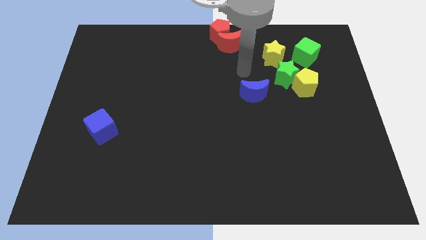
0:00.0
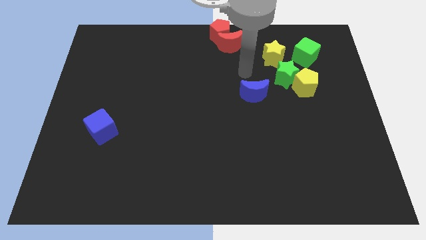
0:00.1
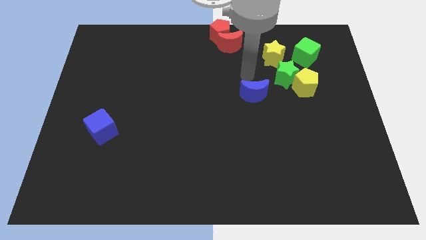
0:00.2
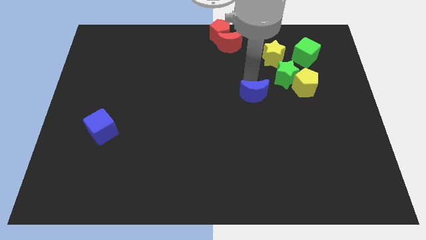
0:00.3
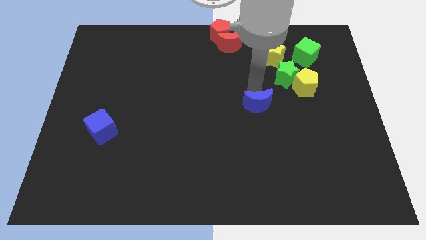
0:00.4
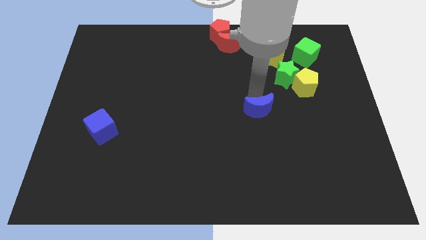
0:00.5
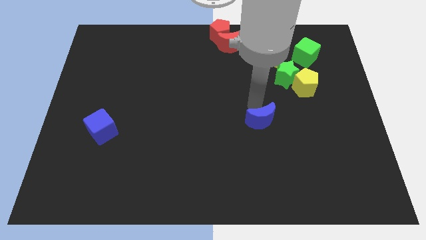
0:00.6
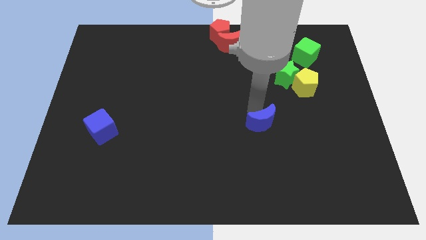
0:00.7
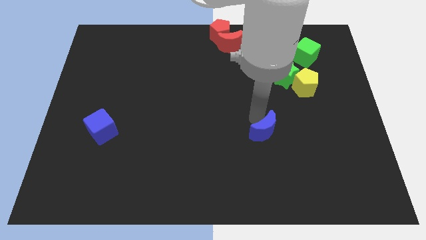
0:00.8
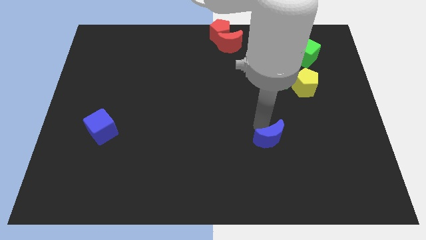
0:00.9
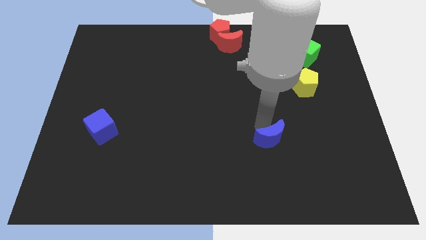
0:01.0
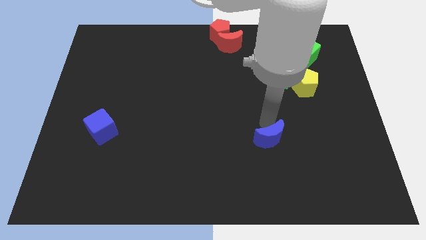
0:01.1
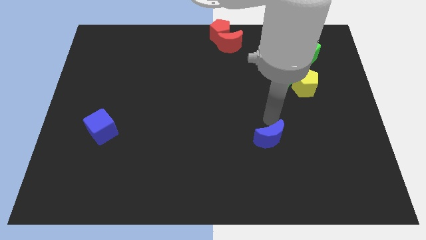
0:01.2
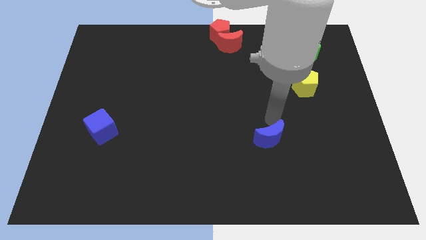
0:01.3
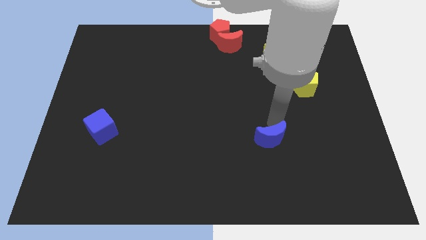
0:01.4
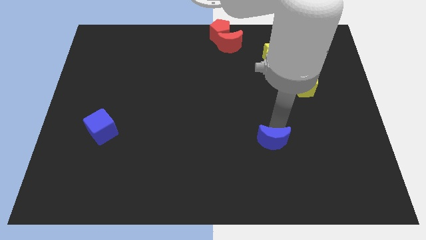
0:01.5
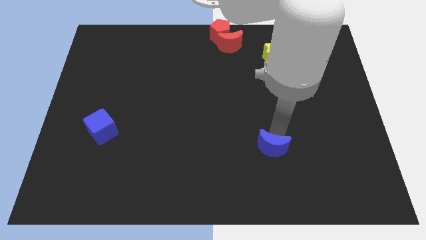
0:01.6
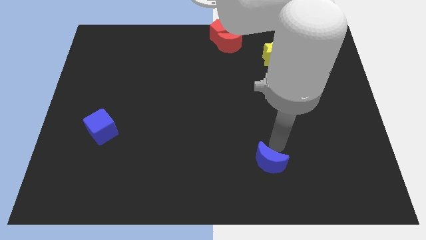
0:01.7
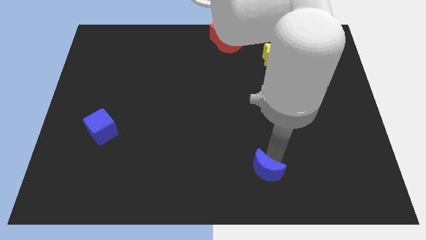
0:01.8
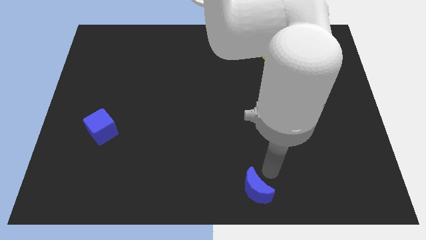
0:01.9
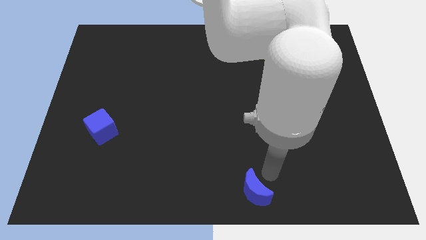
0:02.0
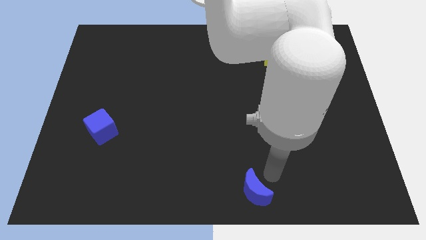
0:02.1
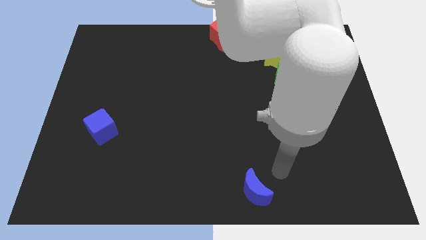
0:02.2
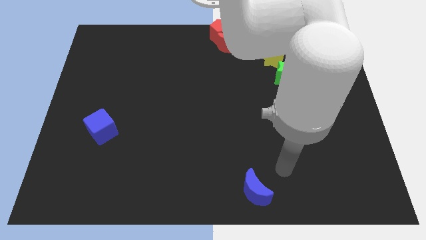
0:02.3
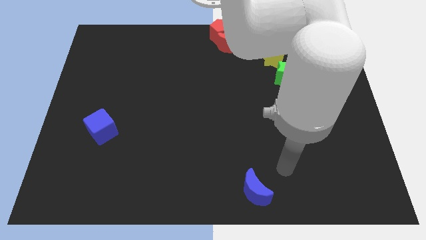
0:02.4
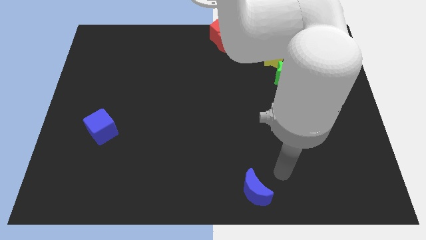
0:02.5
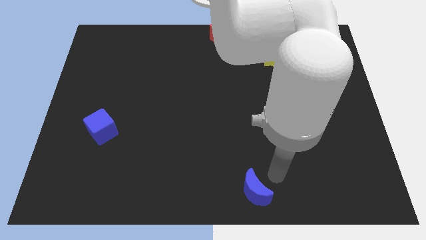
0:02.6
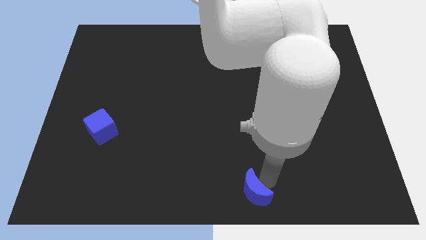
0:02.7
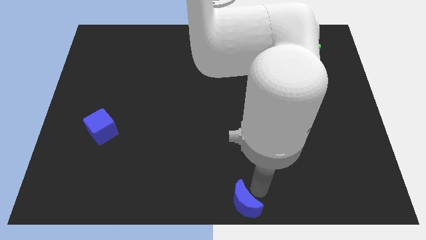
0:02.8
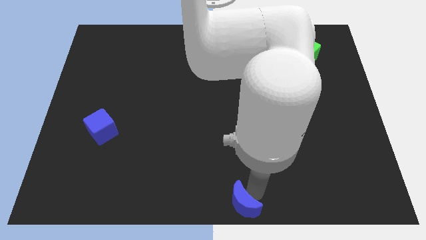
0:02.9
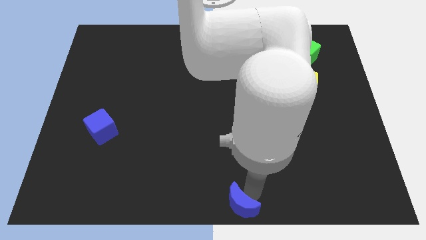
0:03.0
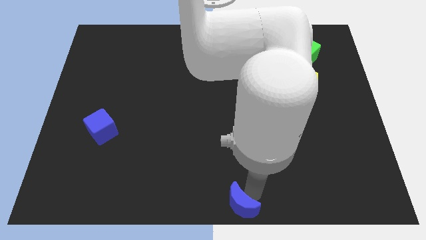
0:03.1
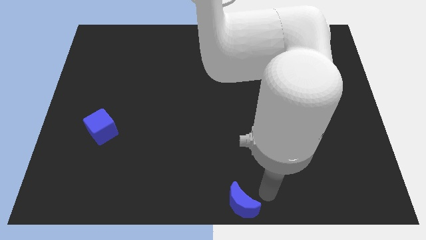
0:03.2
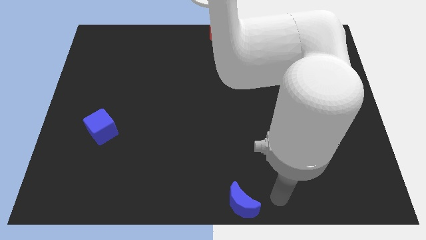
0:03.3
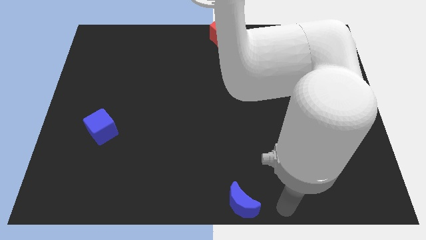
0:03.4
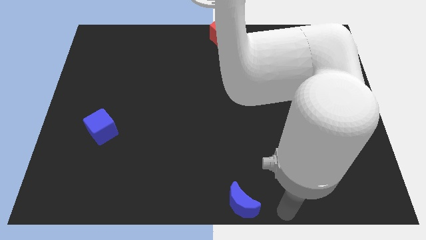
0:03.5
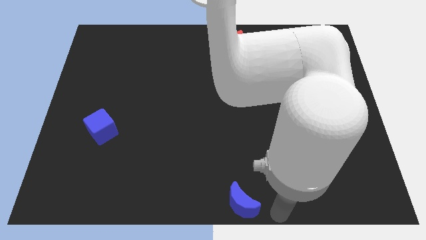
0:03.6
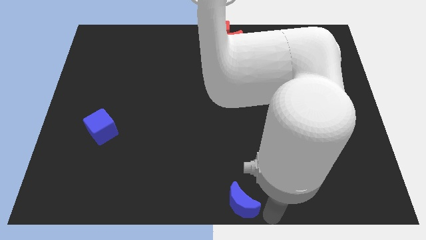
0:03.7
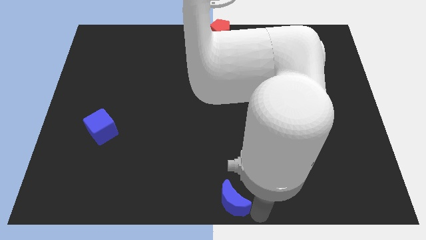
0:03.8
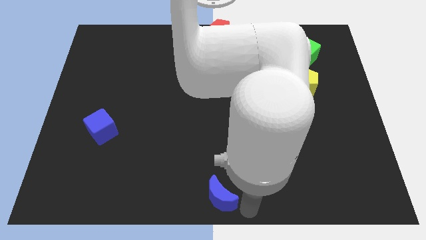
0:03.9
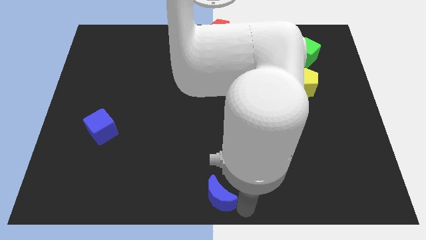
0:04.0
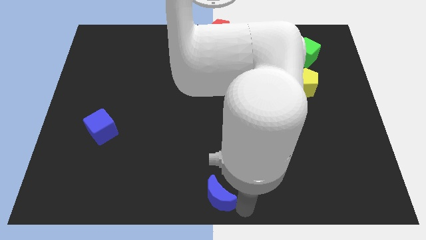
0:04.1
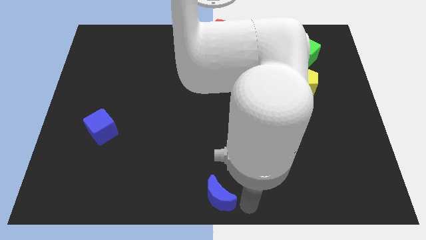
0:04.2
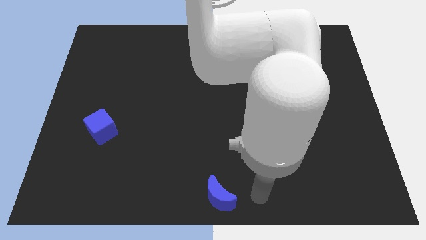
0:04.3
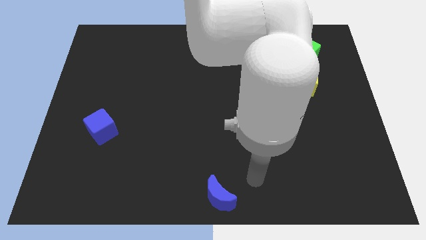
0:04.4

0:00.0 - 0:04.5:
slide the blue crescen to the bottom center of the table

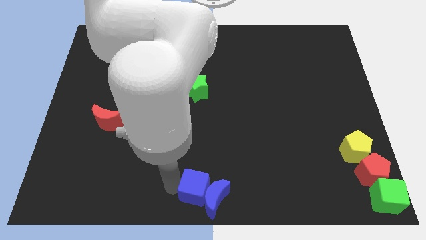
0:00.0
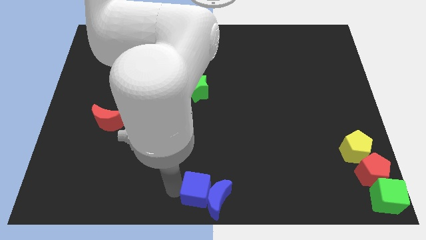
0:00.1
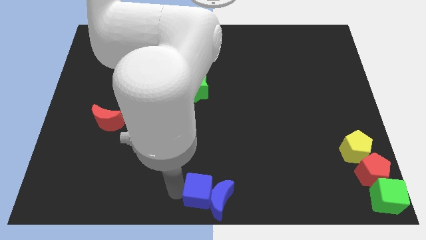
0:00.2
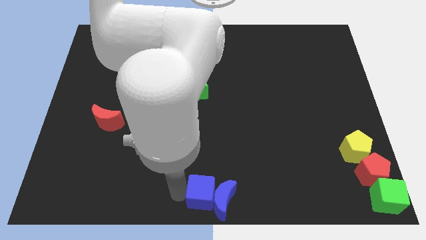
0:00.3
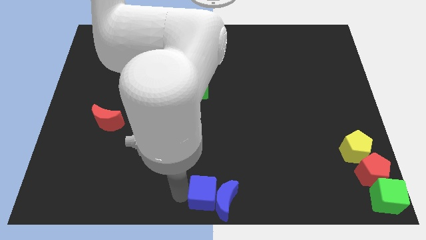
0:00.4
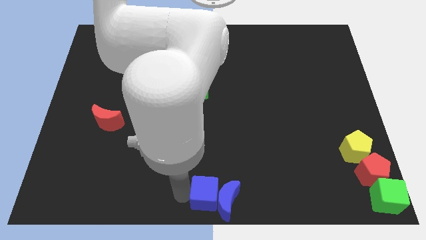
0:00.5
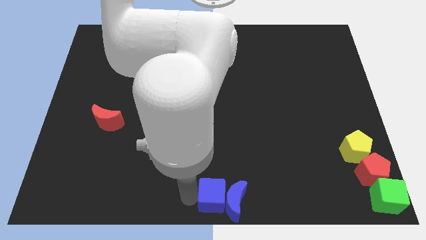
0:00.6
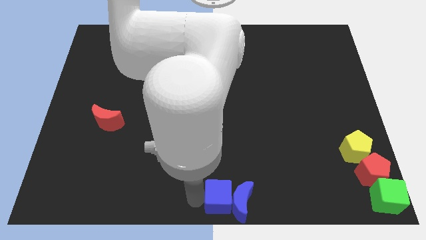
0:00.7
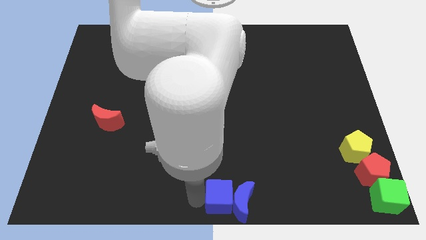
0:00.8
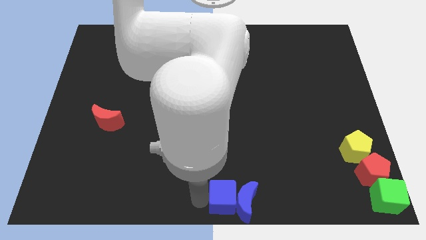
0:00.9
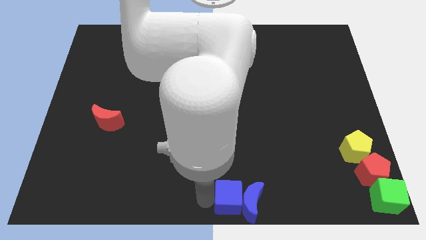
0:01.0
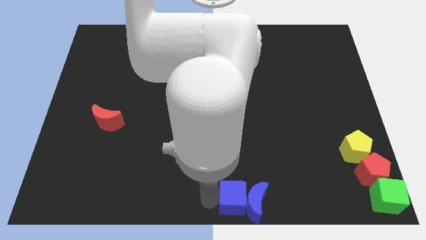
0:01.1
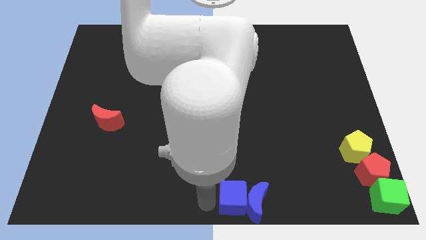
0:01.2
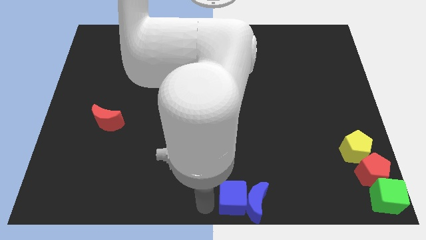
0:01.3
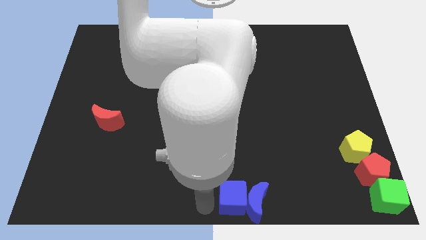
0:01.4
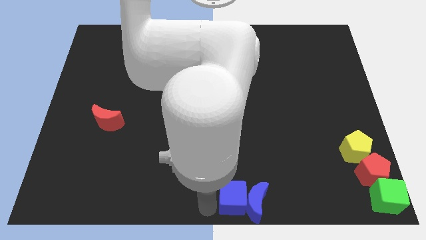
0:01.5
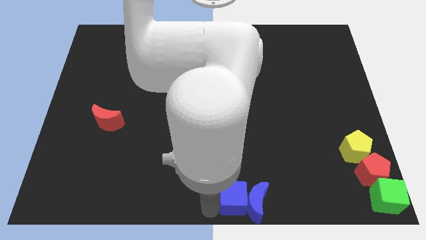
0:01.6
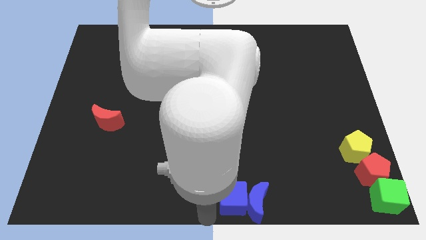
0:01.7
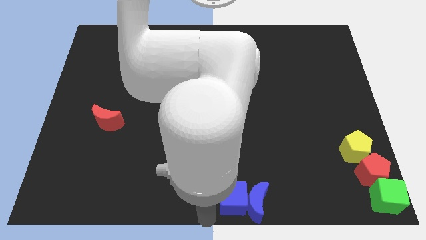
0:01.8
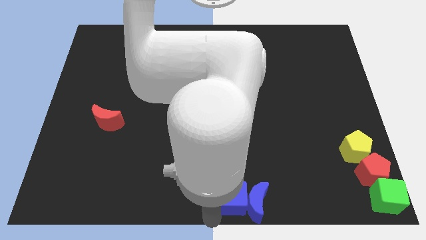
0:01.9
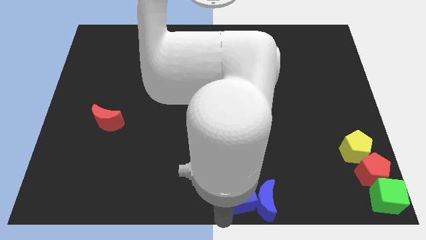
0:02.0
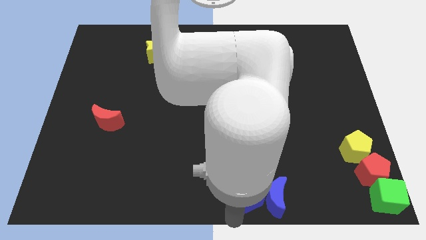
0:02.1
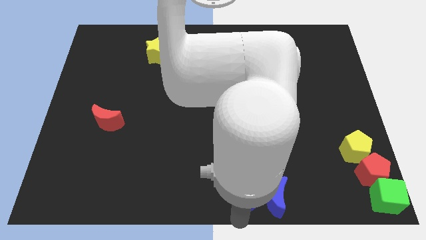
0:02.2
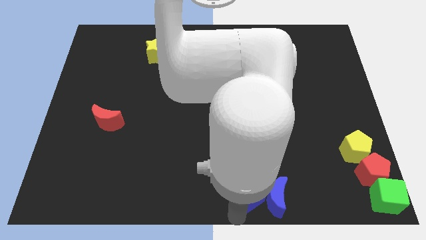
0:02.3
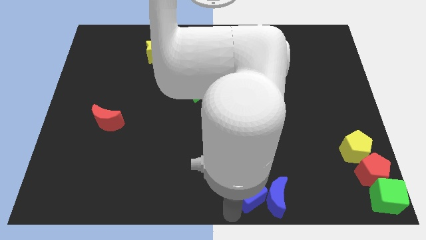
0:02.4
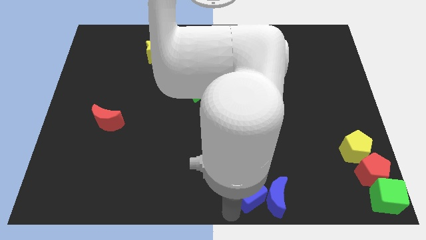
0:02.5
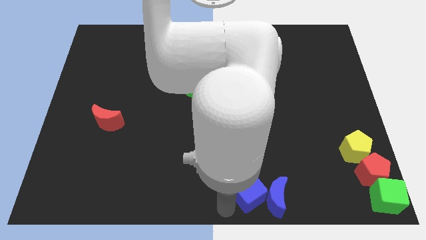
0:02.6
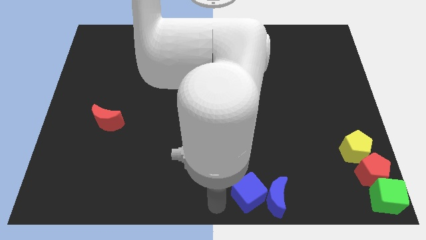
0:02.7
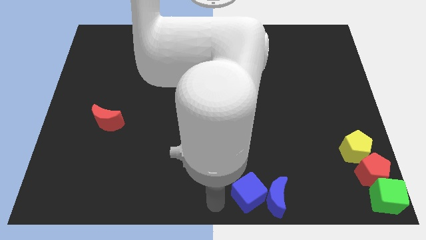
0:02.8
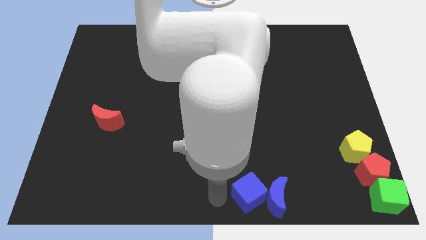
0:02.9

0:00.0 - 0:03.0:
push the blue cube into the blue crescent

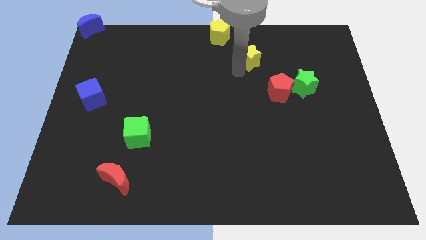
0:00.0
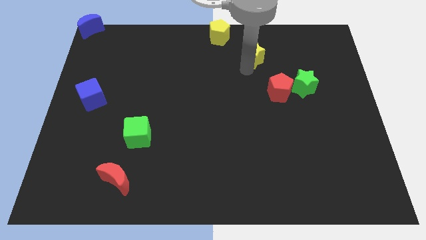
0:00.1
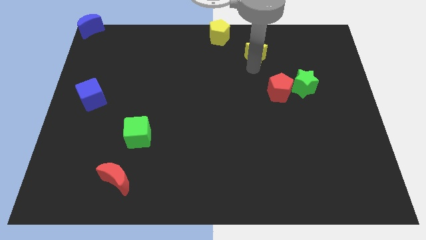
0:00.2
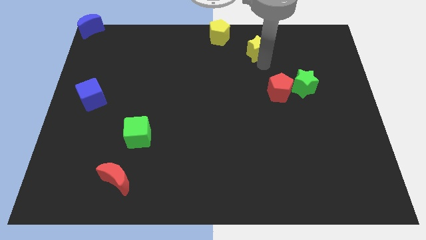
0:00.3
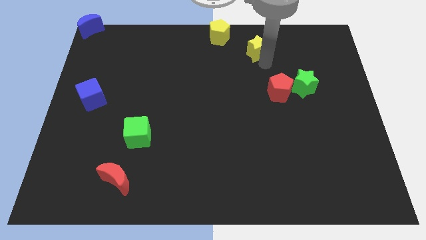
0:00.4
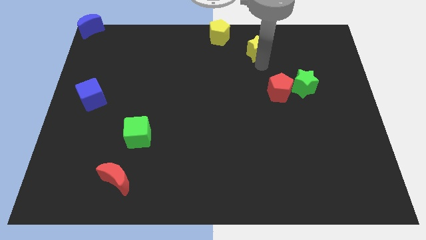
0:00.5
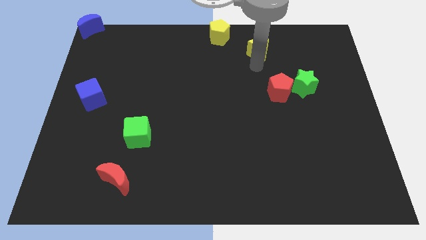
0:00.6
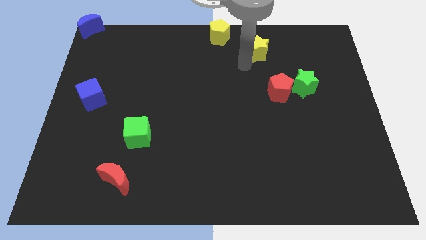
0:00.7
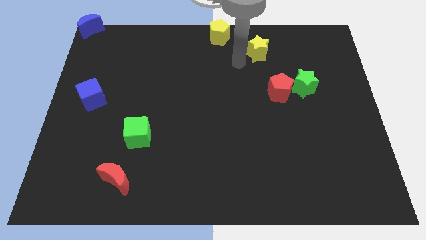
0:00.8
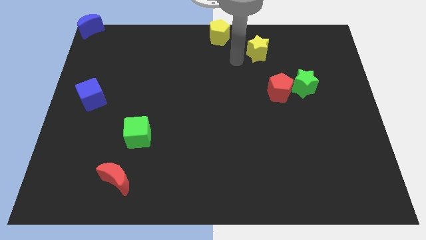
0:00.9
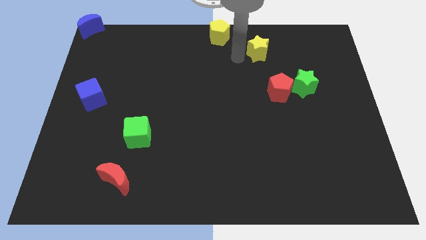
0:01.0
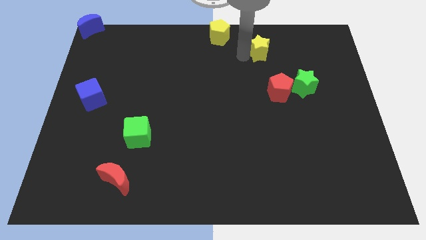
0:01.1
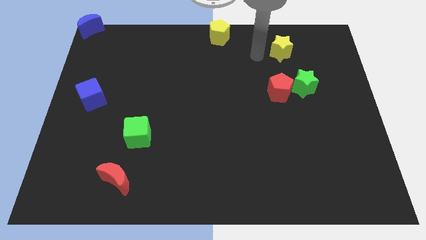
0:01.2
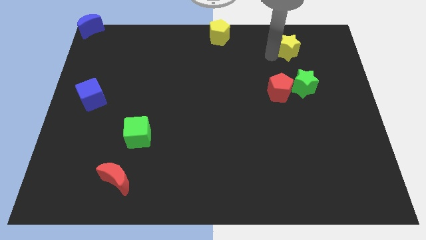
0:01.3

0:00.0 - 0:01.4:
place the yellow star vertically above the red pentagon
